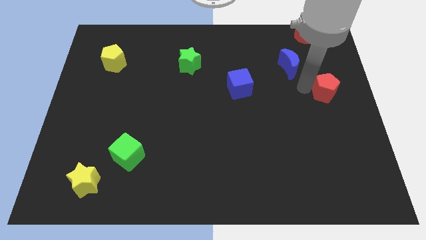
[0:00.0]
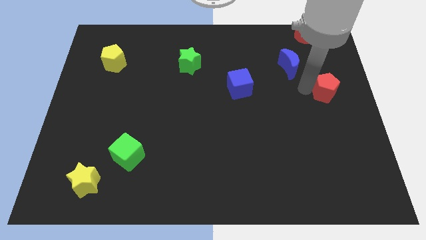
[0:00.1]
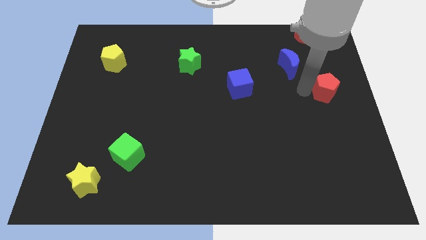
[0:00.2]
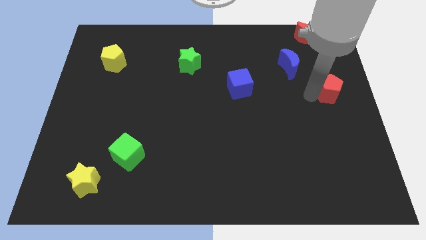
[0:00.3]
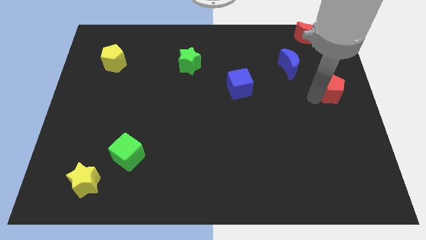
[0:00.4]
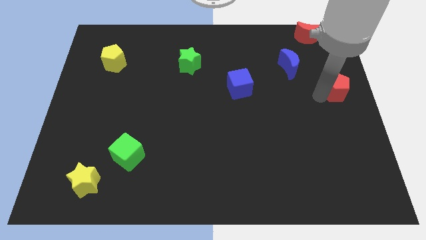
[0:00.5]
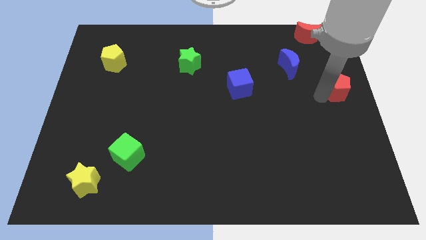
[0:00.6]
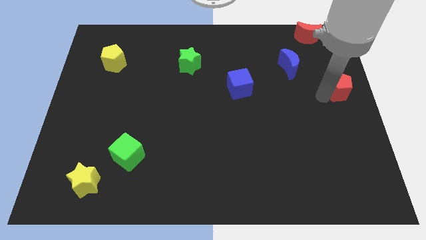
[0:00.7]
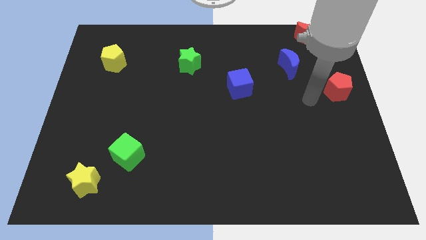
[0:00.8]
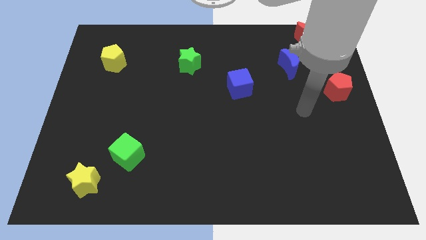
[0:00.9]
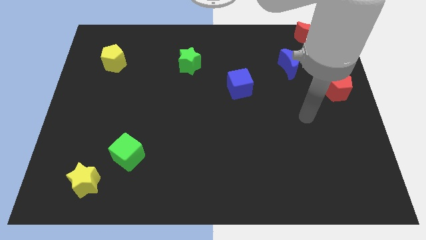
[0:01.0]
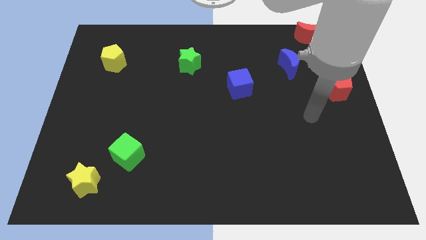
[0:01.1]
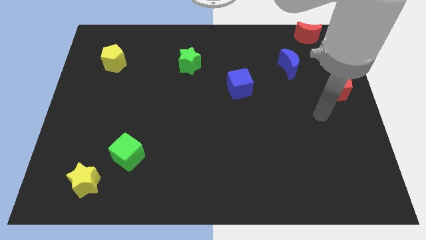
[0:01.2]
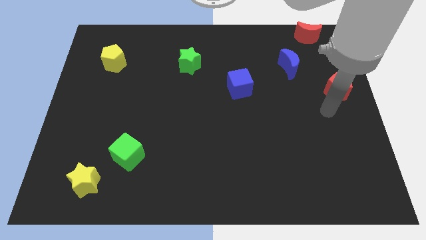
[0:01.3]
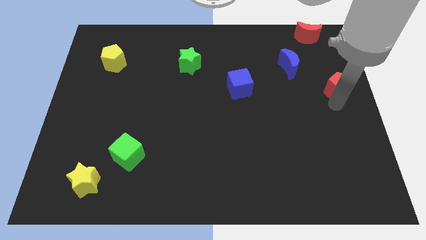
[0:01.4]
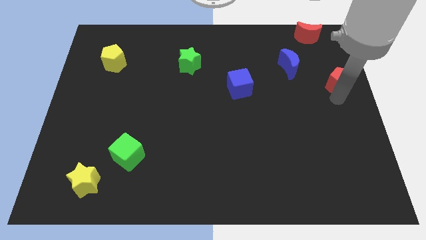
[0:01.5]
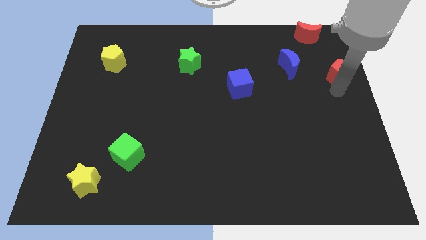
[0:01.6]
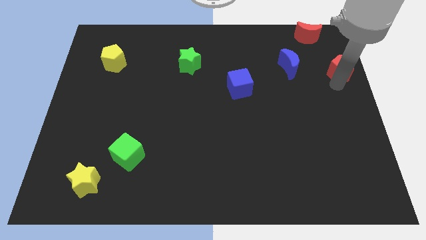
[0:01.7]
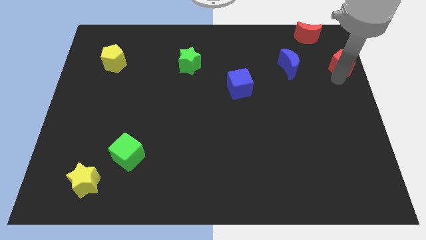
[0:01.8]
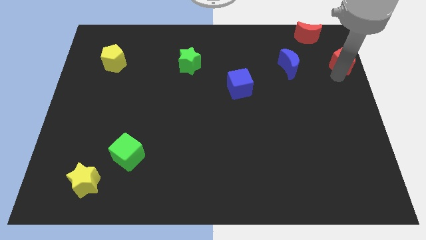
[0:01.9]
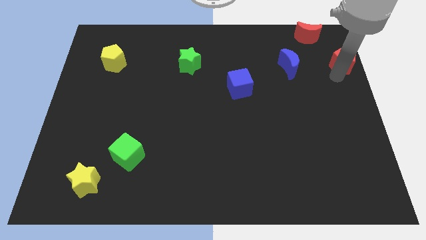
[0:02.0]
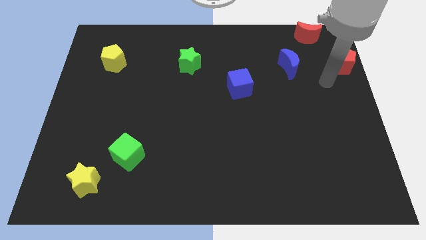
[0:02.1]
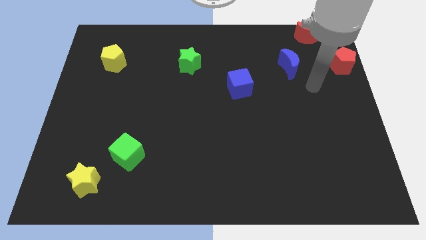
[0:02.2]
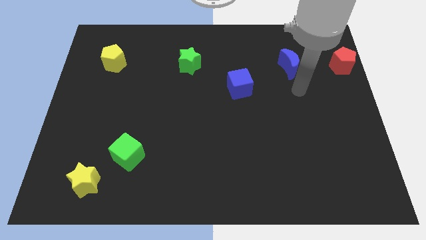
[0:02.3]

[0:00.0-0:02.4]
move the red pentagon to the horizontal right side of the blue moon

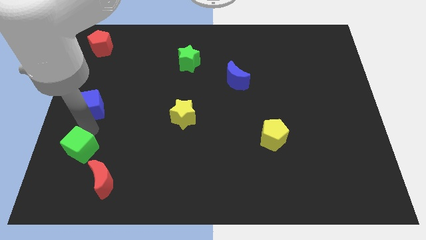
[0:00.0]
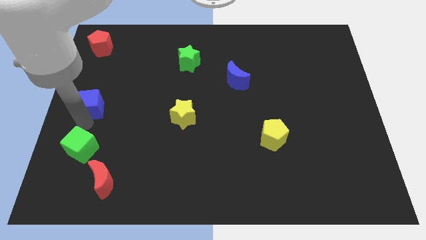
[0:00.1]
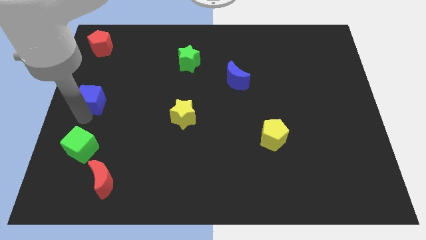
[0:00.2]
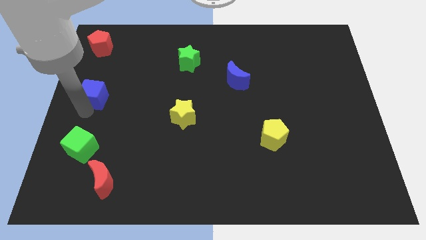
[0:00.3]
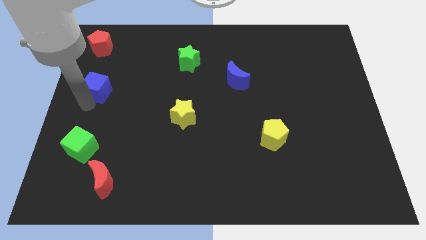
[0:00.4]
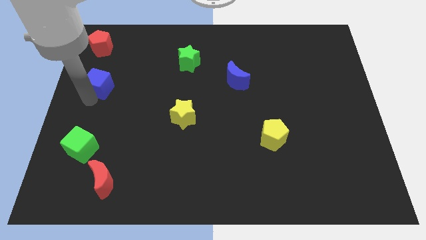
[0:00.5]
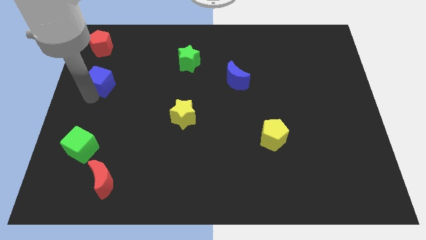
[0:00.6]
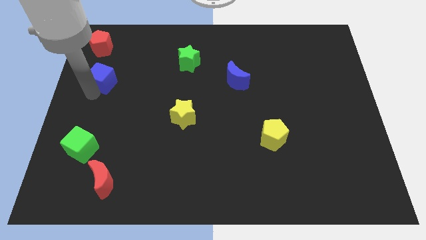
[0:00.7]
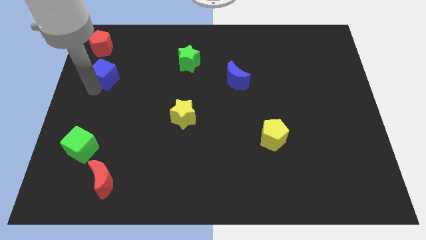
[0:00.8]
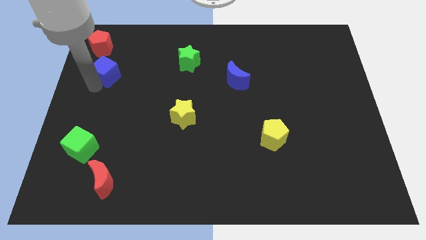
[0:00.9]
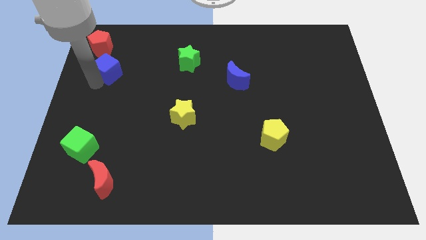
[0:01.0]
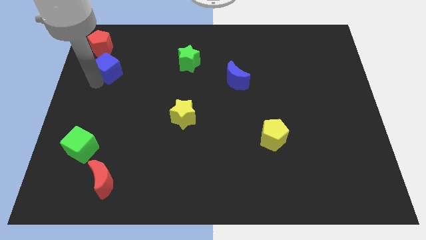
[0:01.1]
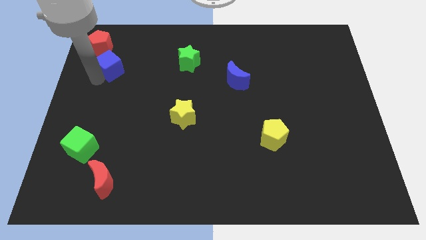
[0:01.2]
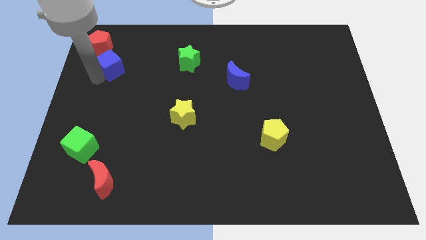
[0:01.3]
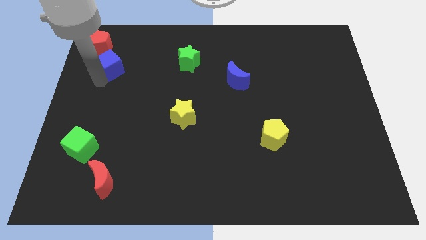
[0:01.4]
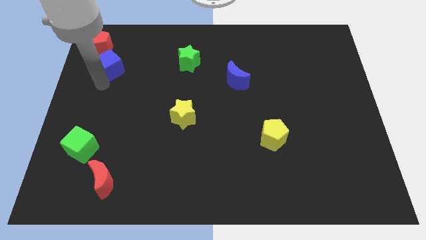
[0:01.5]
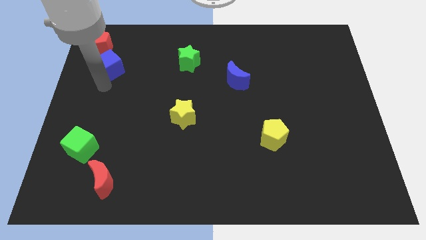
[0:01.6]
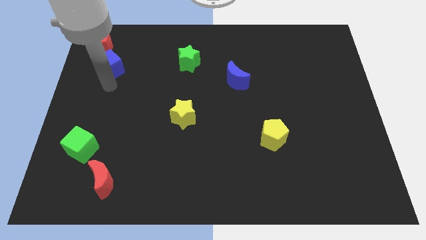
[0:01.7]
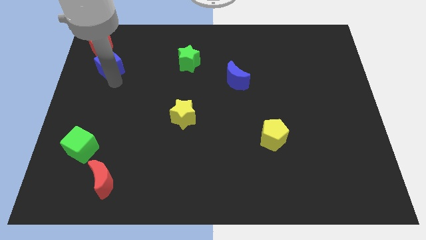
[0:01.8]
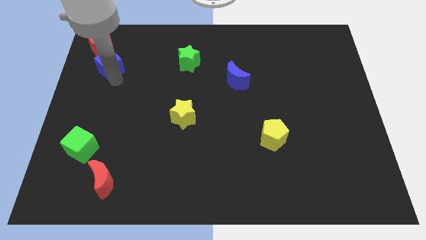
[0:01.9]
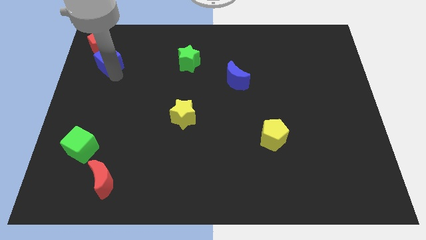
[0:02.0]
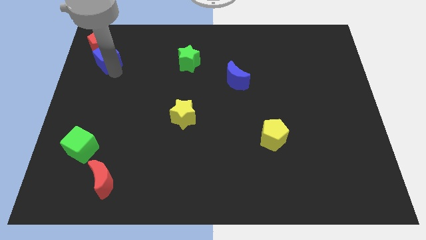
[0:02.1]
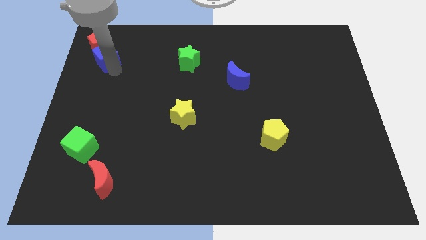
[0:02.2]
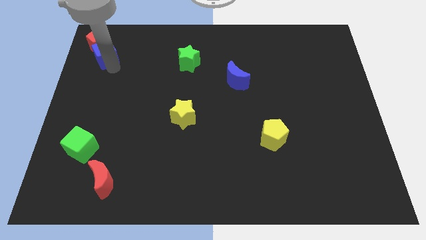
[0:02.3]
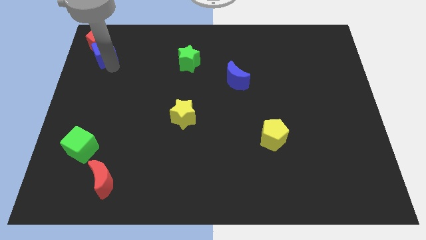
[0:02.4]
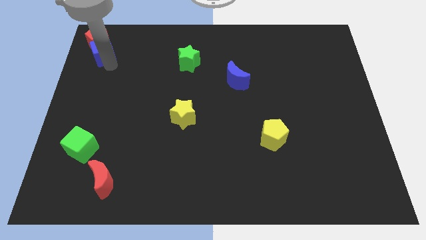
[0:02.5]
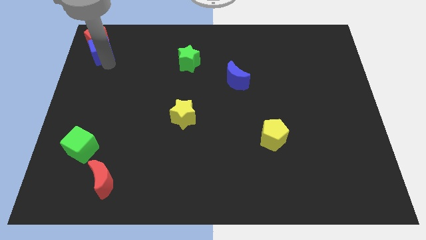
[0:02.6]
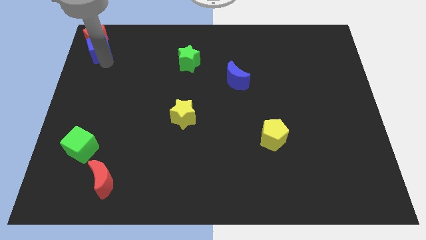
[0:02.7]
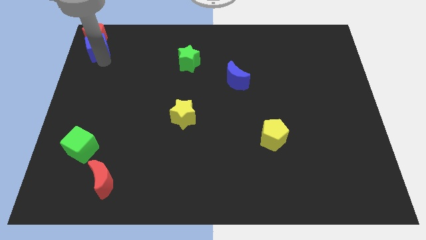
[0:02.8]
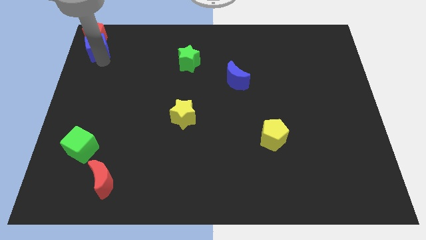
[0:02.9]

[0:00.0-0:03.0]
move the blue cube to the bottom of the red pentagon

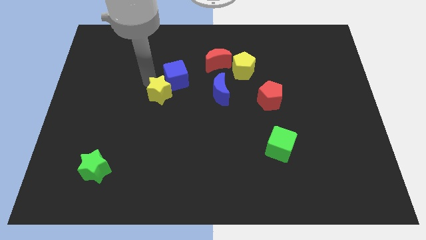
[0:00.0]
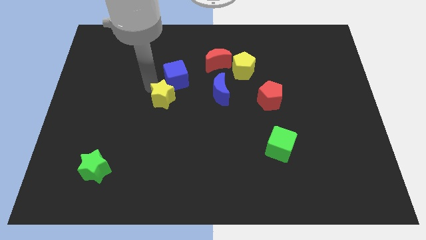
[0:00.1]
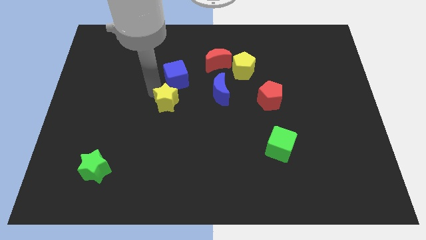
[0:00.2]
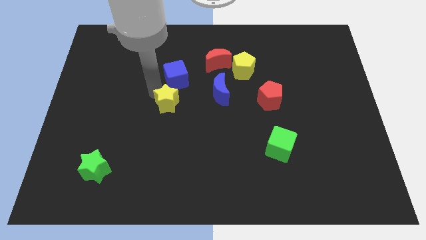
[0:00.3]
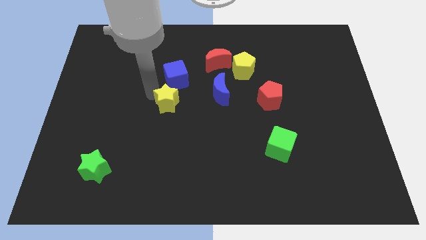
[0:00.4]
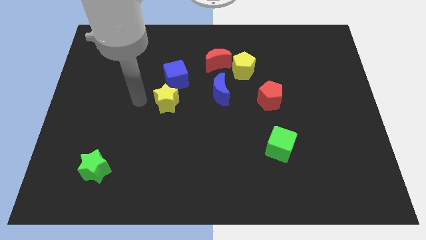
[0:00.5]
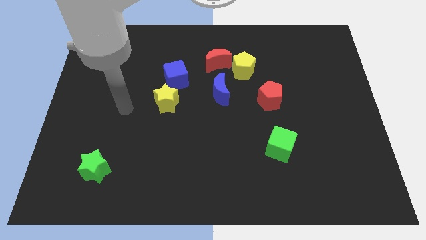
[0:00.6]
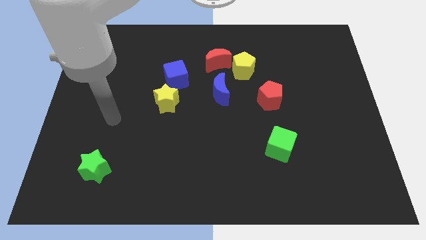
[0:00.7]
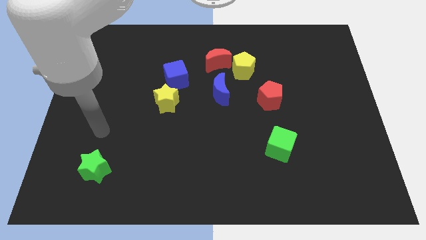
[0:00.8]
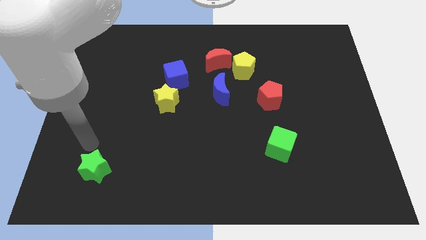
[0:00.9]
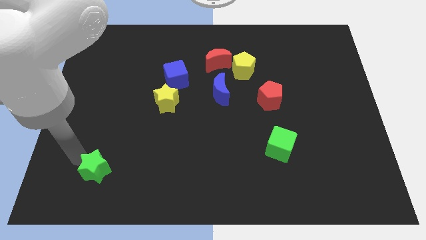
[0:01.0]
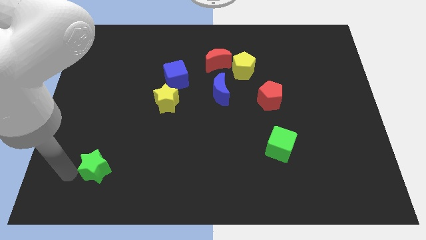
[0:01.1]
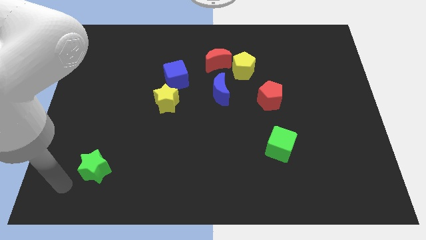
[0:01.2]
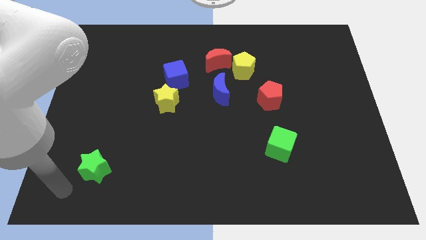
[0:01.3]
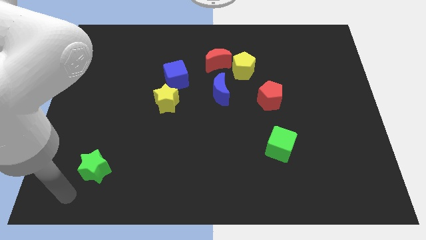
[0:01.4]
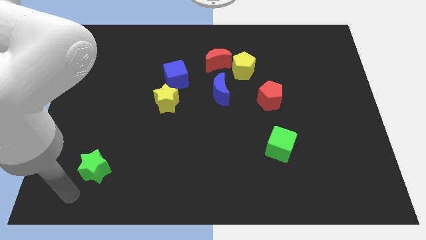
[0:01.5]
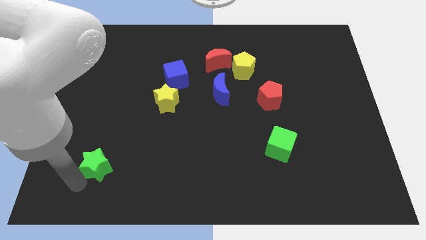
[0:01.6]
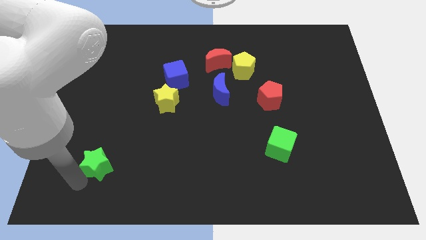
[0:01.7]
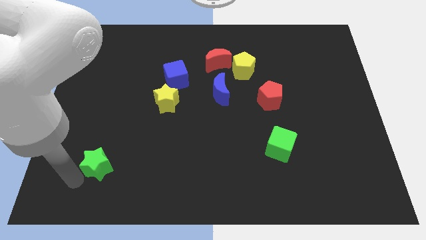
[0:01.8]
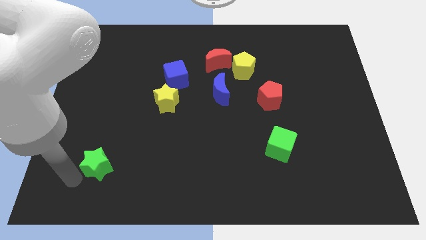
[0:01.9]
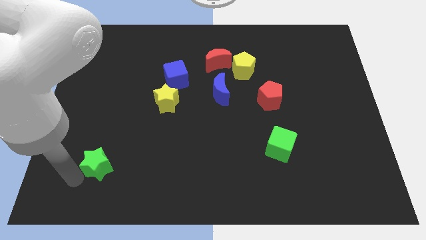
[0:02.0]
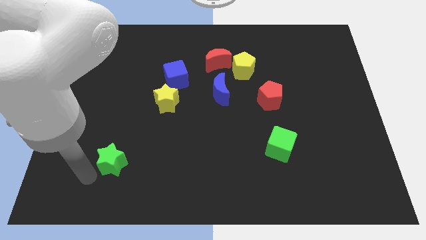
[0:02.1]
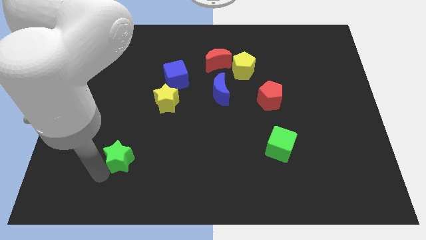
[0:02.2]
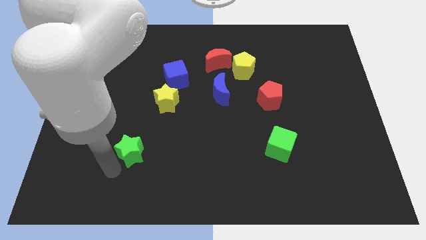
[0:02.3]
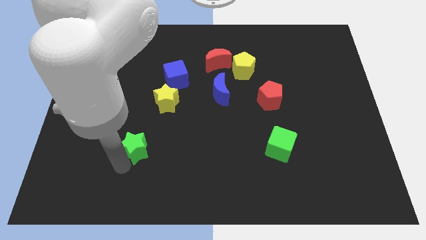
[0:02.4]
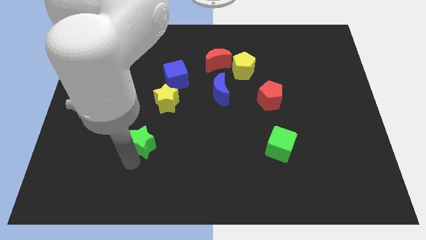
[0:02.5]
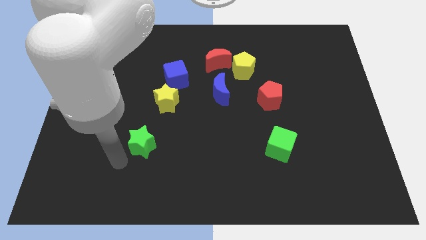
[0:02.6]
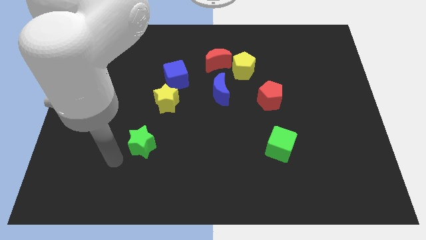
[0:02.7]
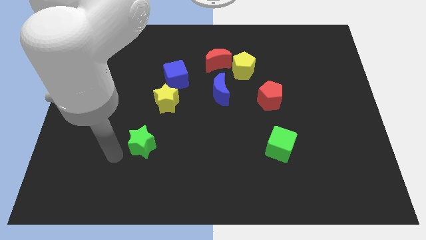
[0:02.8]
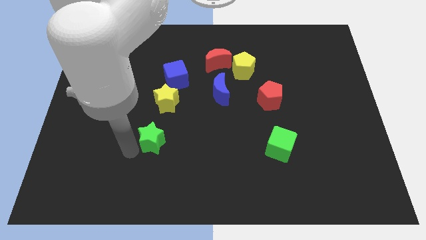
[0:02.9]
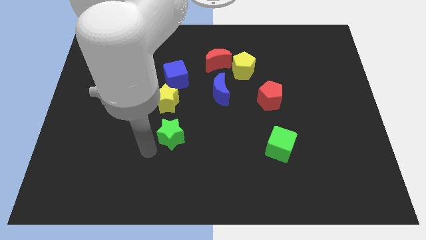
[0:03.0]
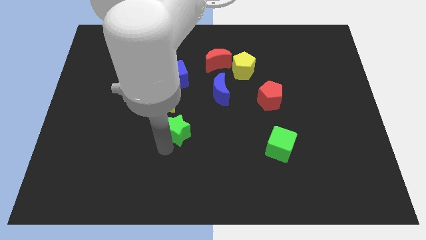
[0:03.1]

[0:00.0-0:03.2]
push green star below yellow star

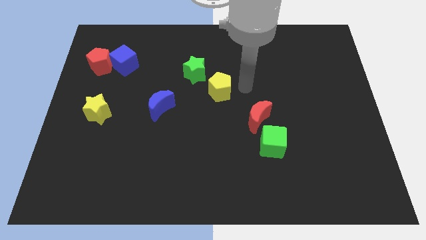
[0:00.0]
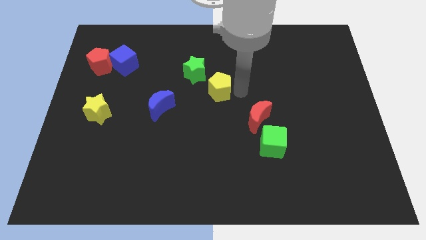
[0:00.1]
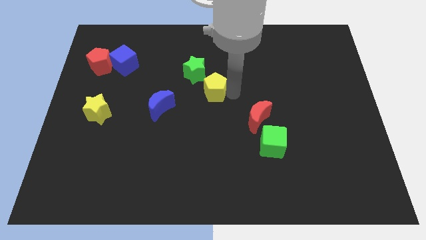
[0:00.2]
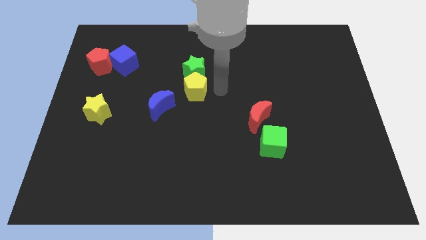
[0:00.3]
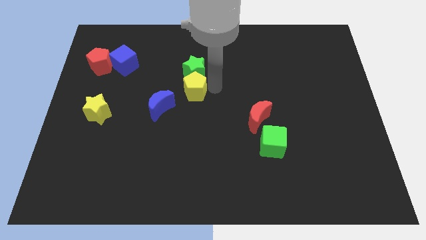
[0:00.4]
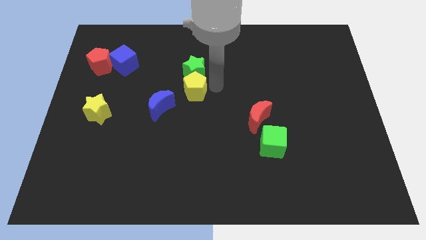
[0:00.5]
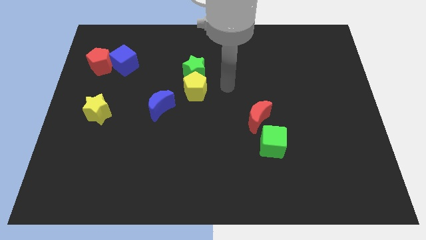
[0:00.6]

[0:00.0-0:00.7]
push the yellow pentagon to the bottom of the green star
